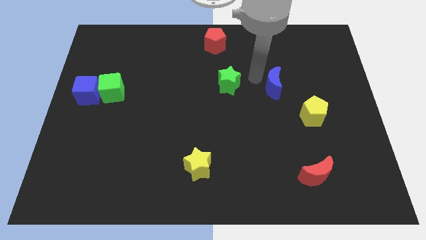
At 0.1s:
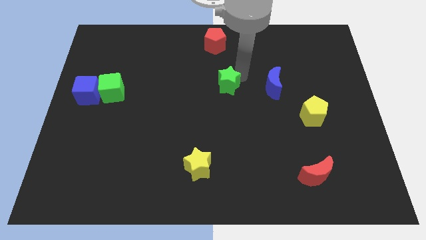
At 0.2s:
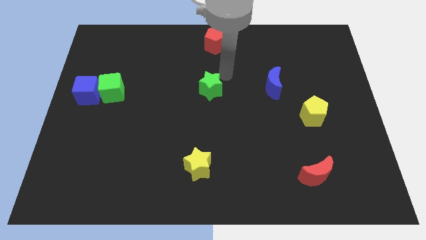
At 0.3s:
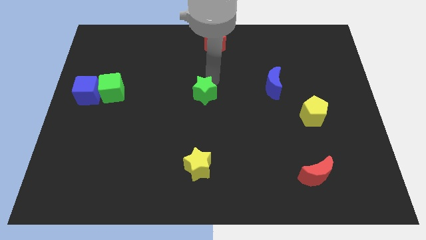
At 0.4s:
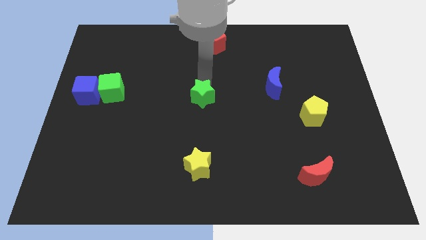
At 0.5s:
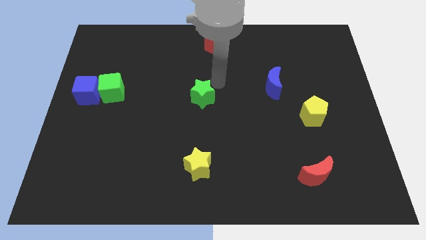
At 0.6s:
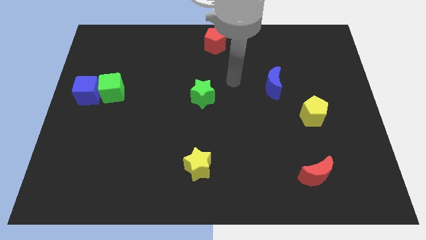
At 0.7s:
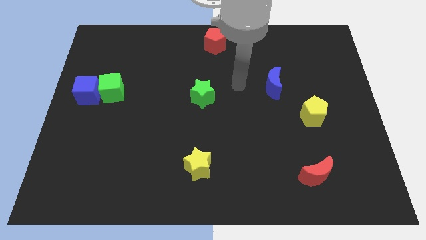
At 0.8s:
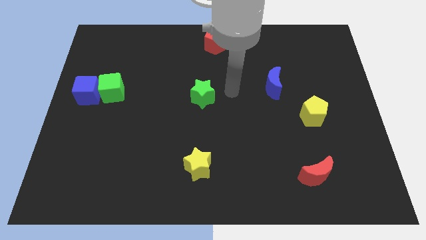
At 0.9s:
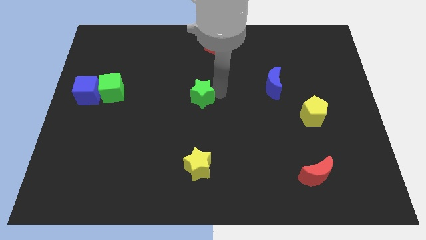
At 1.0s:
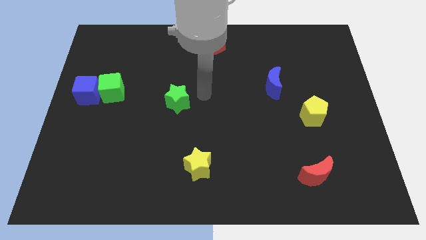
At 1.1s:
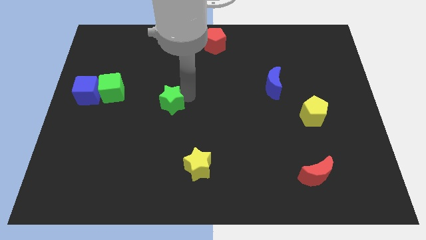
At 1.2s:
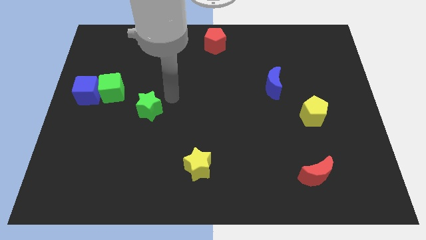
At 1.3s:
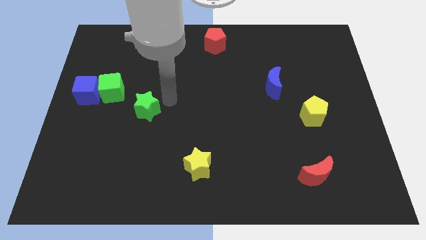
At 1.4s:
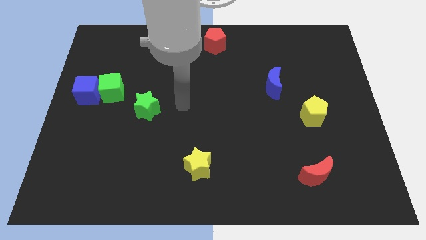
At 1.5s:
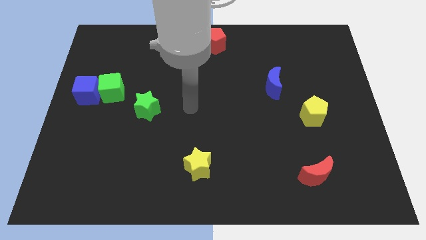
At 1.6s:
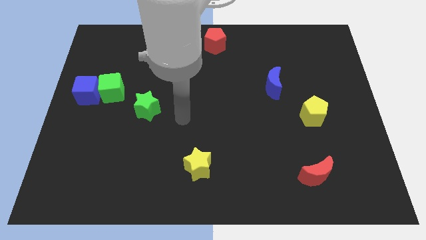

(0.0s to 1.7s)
push the green star to the bottom right of the green cube

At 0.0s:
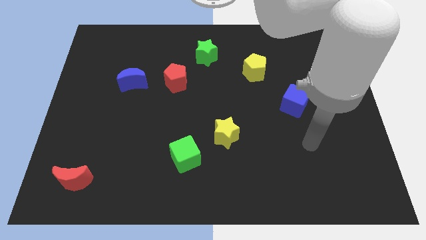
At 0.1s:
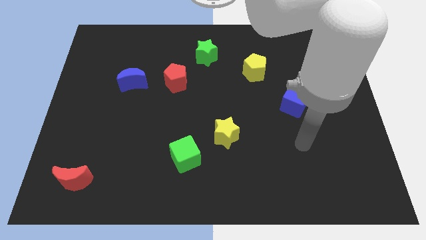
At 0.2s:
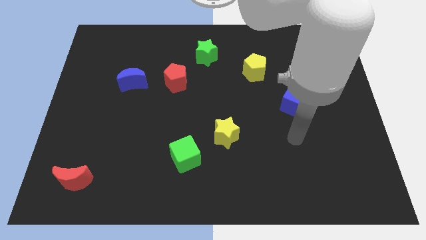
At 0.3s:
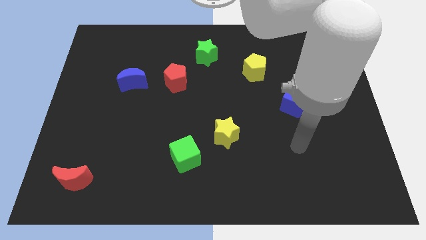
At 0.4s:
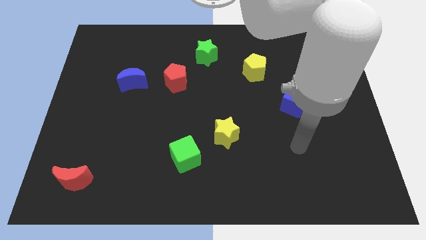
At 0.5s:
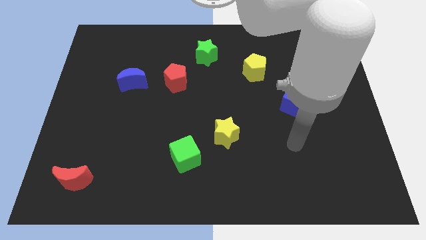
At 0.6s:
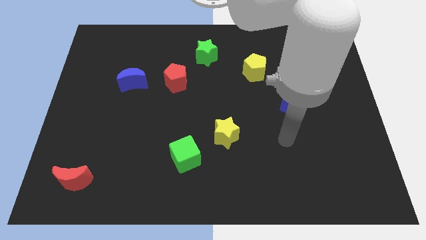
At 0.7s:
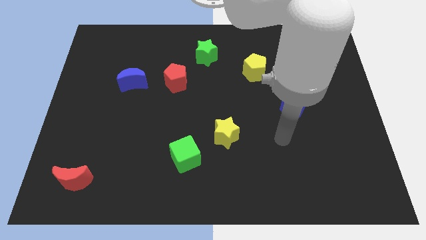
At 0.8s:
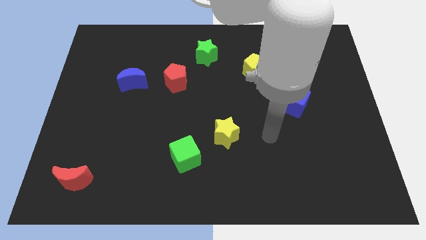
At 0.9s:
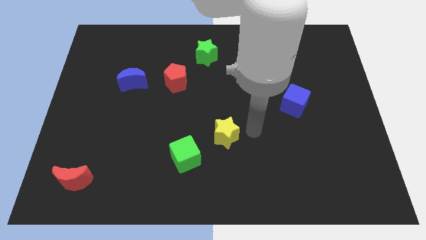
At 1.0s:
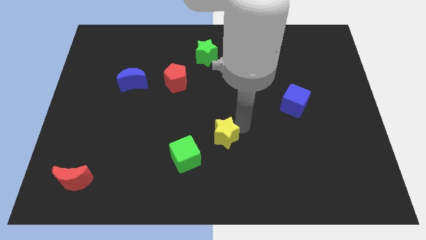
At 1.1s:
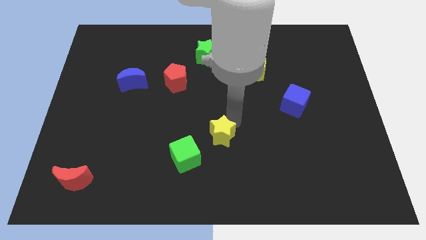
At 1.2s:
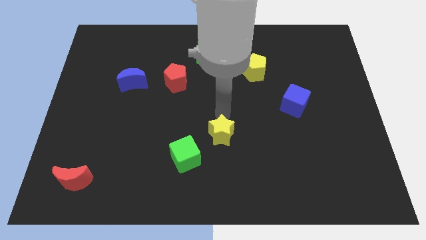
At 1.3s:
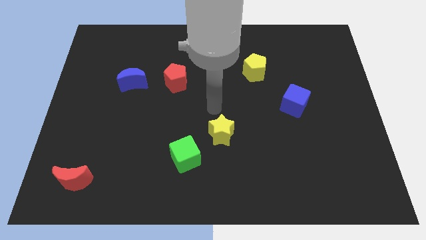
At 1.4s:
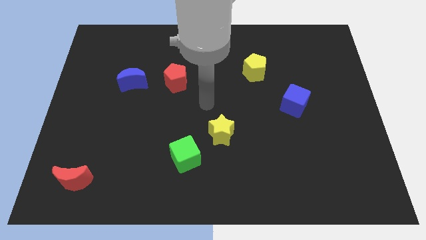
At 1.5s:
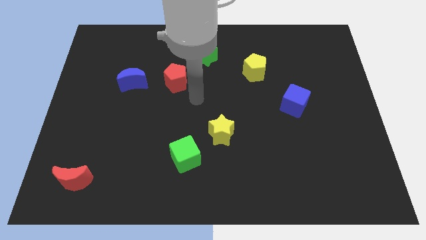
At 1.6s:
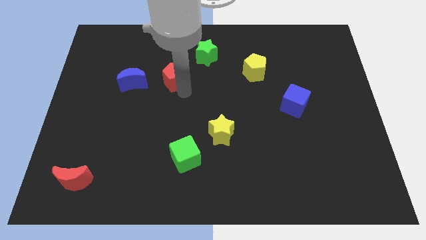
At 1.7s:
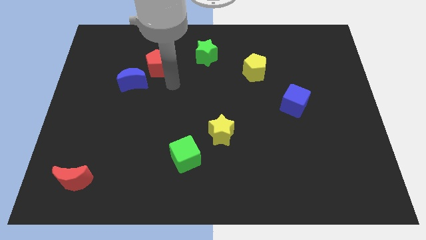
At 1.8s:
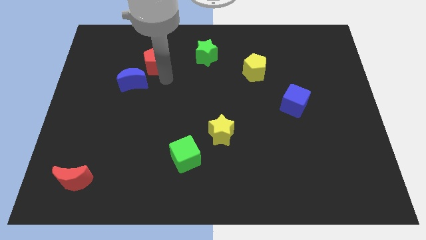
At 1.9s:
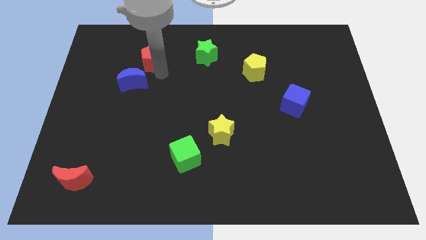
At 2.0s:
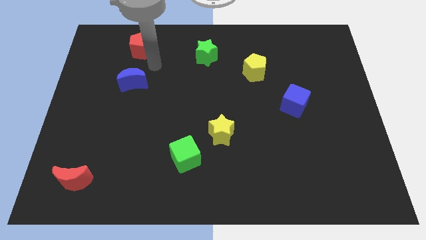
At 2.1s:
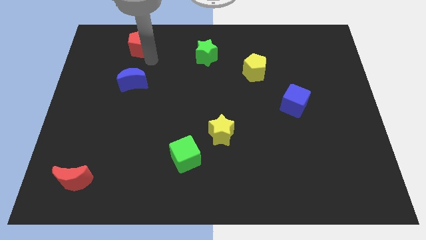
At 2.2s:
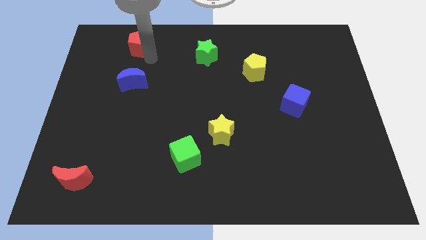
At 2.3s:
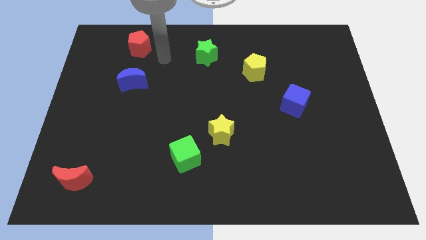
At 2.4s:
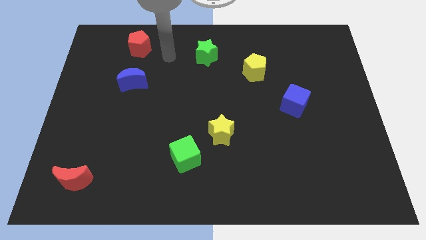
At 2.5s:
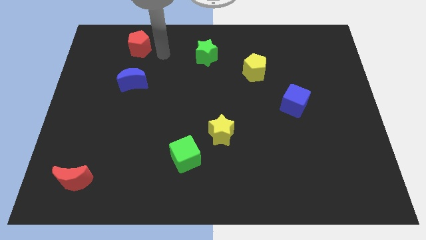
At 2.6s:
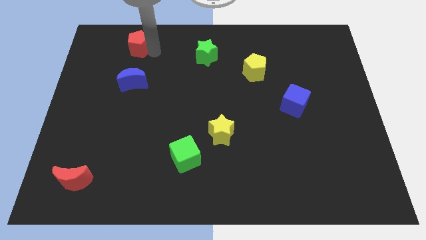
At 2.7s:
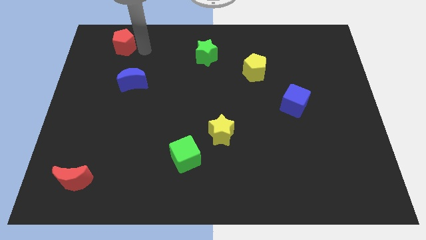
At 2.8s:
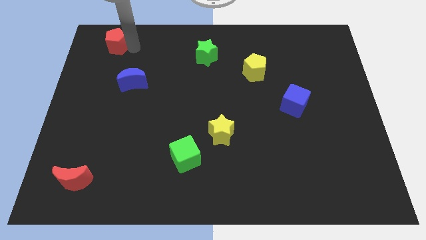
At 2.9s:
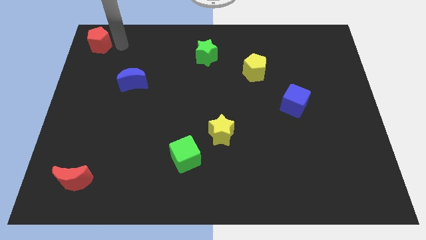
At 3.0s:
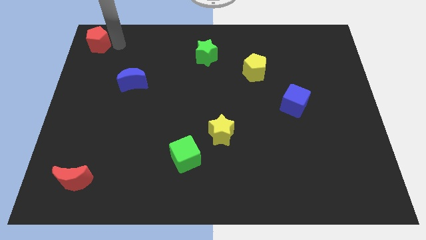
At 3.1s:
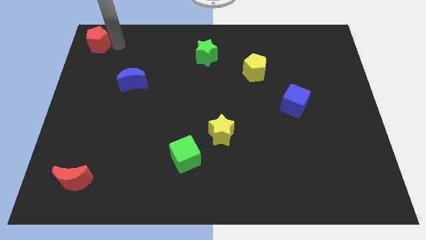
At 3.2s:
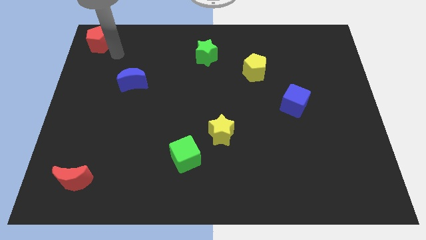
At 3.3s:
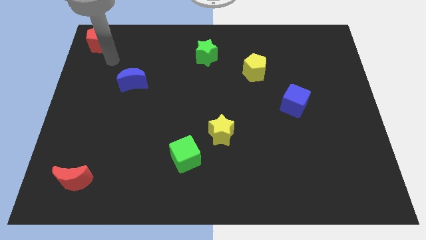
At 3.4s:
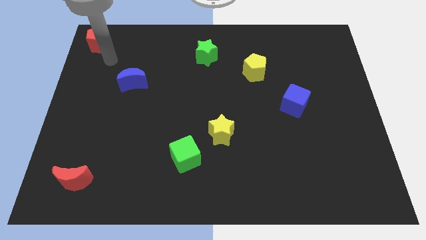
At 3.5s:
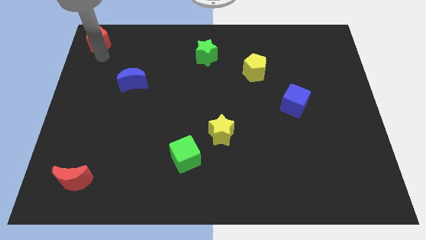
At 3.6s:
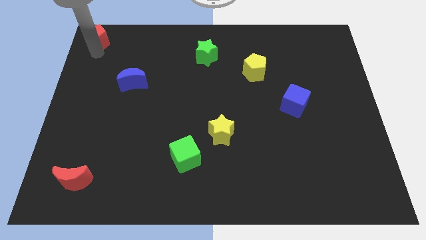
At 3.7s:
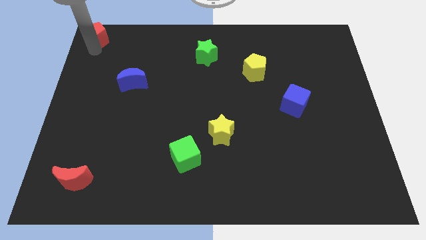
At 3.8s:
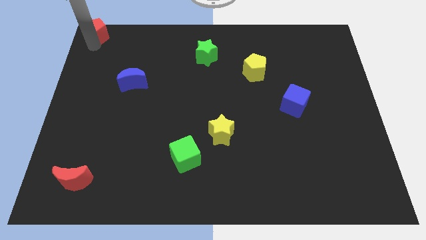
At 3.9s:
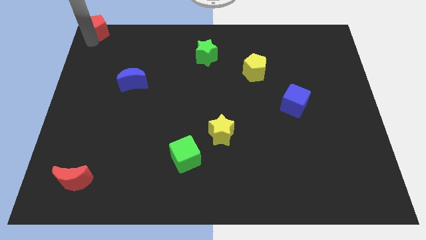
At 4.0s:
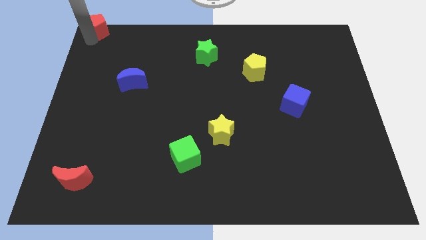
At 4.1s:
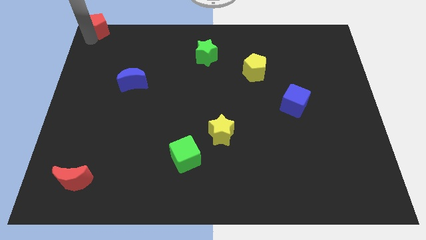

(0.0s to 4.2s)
place the red pentagon at the top left corner of the board

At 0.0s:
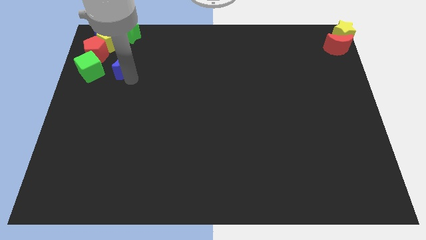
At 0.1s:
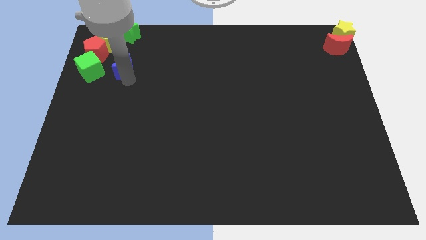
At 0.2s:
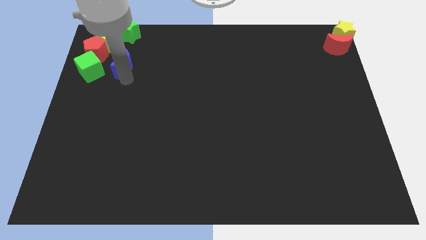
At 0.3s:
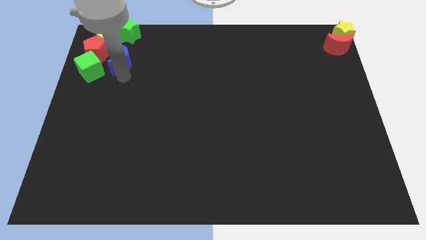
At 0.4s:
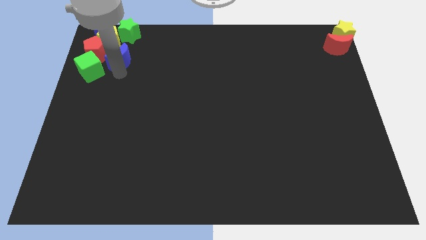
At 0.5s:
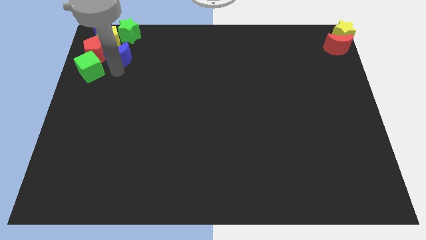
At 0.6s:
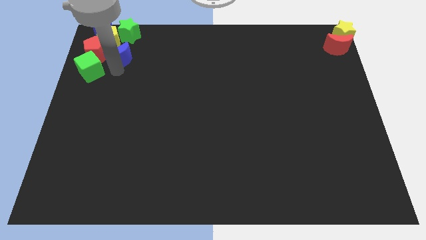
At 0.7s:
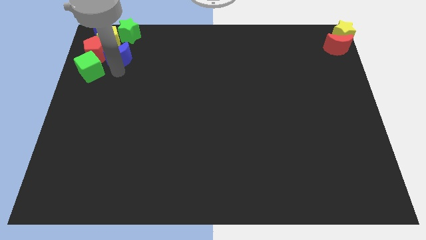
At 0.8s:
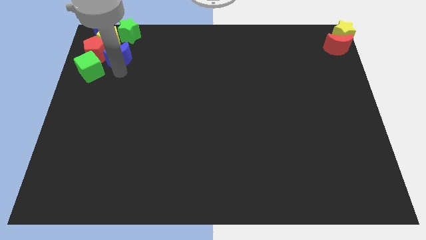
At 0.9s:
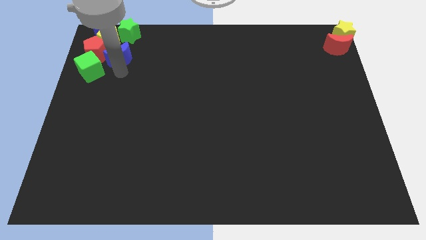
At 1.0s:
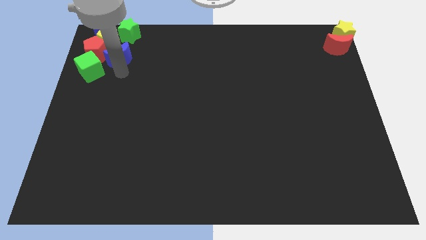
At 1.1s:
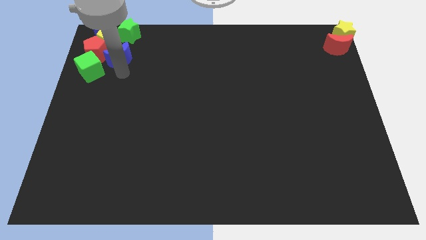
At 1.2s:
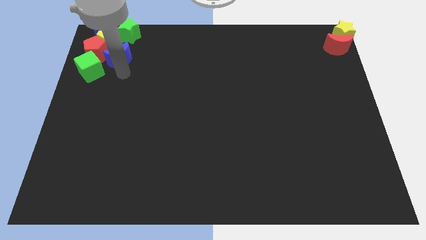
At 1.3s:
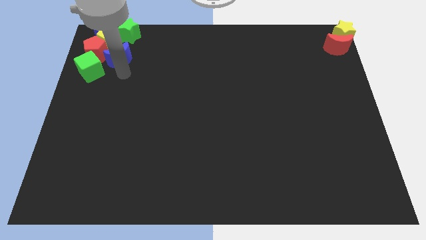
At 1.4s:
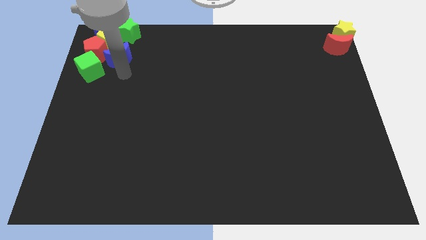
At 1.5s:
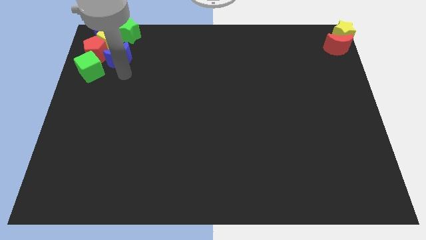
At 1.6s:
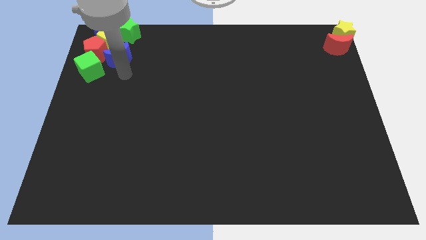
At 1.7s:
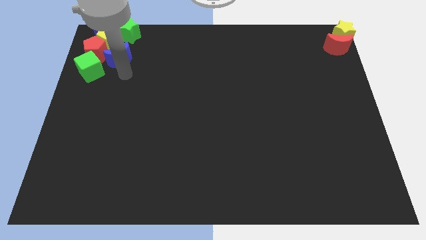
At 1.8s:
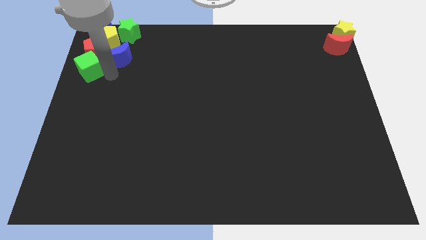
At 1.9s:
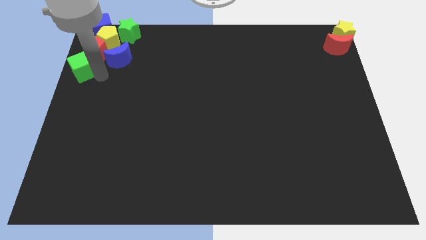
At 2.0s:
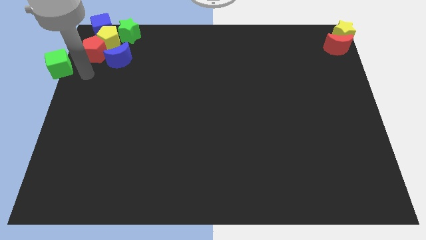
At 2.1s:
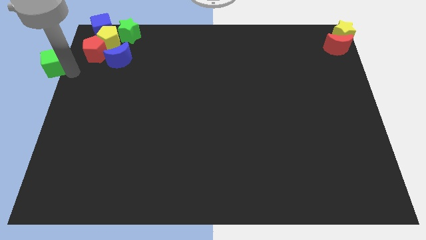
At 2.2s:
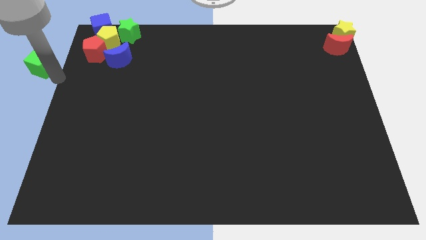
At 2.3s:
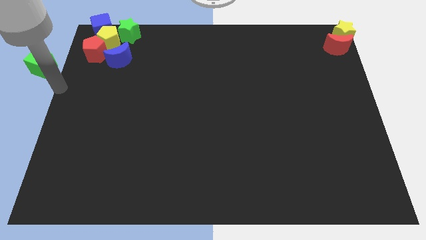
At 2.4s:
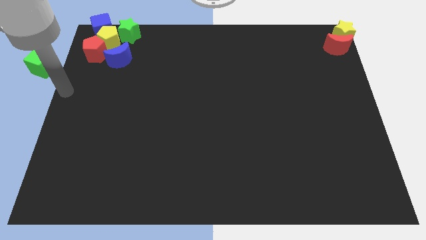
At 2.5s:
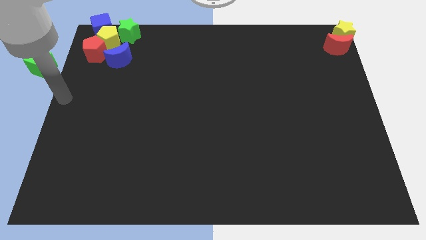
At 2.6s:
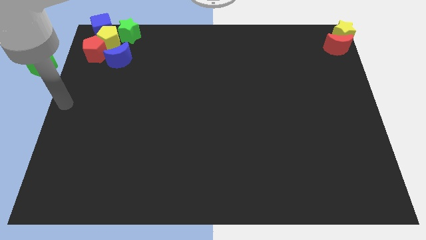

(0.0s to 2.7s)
push the green cube to the left

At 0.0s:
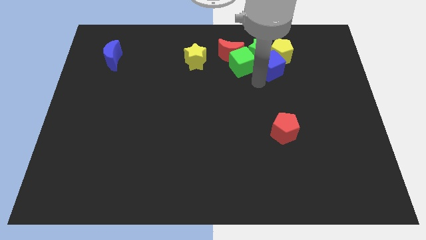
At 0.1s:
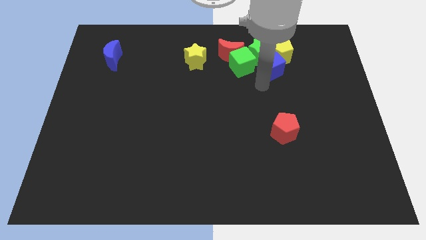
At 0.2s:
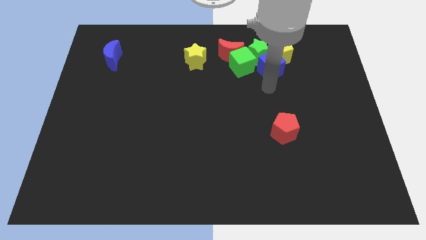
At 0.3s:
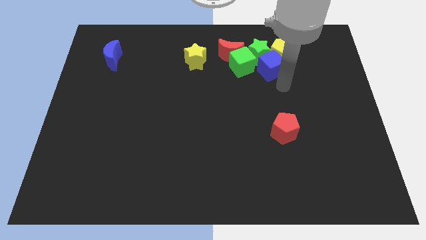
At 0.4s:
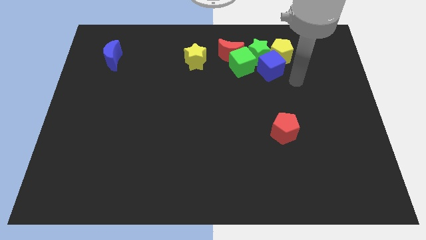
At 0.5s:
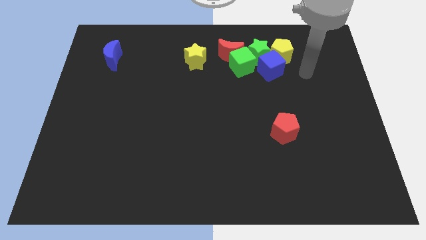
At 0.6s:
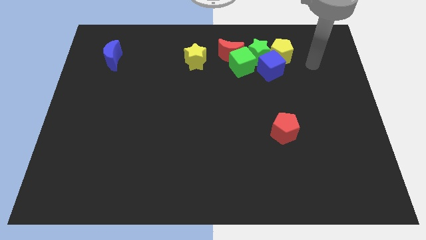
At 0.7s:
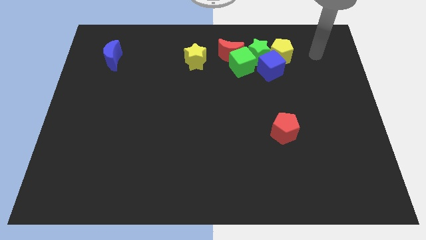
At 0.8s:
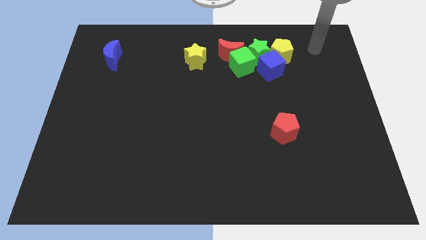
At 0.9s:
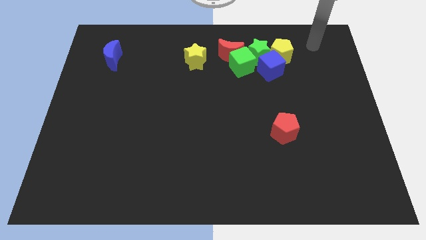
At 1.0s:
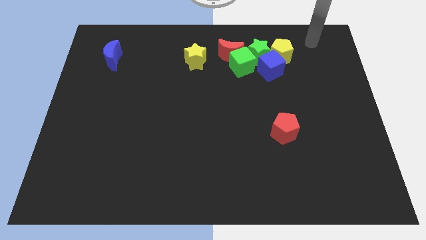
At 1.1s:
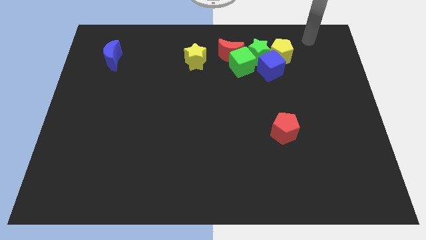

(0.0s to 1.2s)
move your arm away from green cube
